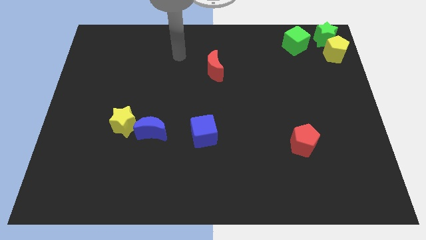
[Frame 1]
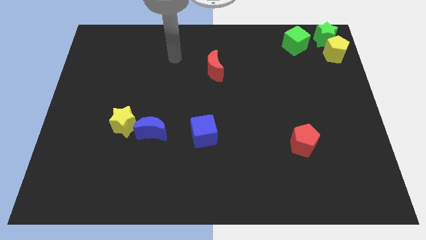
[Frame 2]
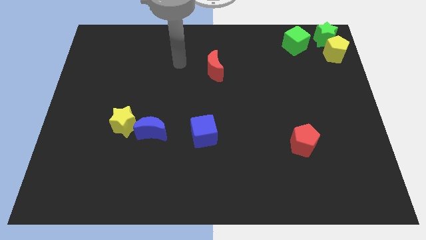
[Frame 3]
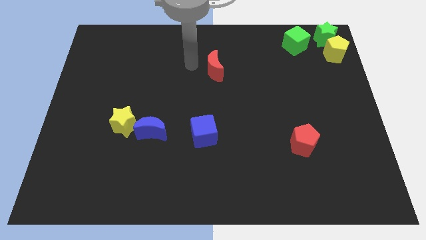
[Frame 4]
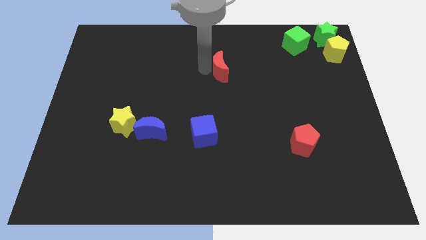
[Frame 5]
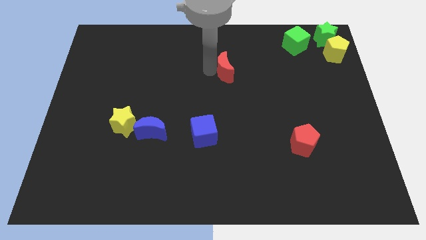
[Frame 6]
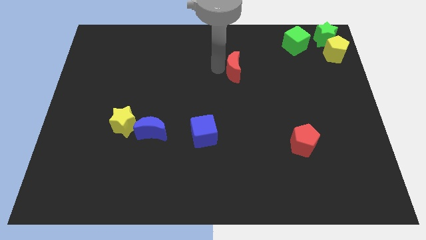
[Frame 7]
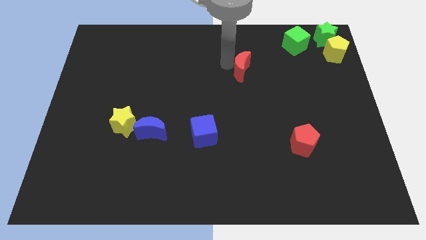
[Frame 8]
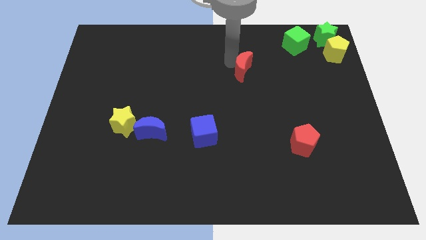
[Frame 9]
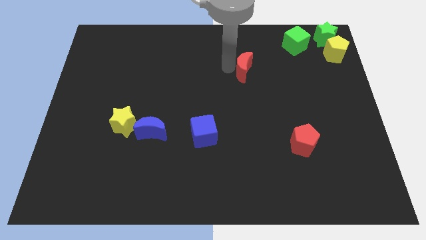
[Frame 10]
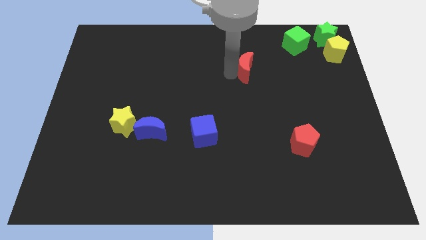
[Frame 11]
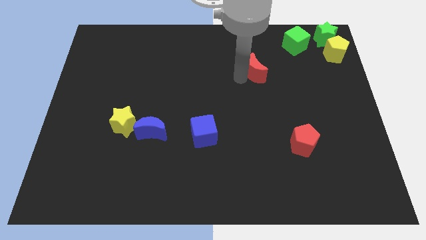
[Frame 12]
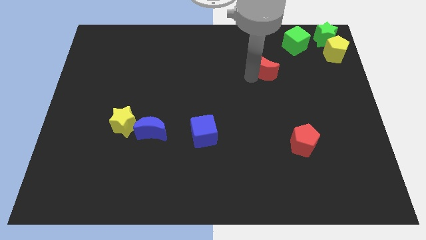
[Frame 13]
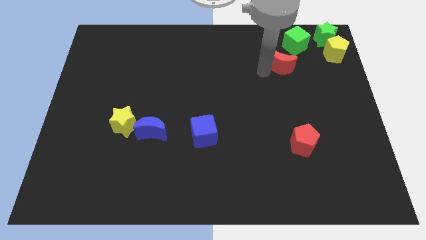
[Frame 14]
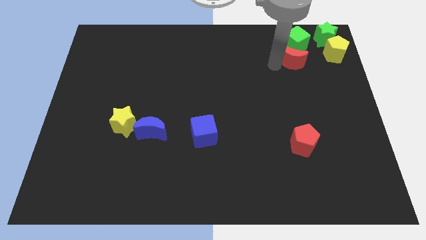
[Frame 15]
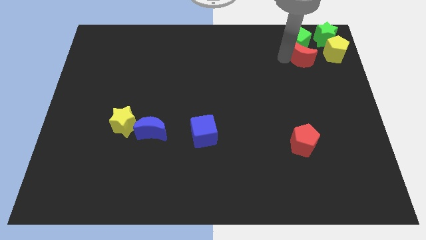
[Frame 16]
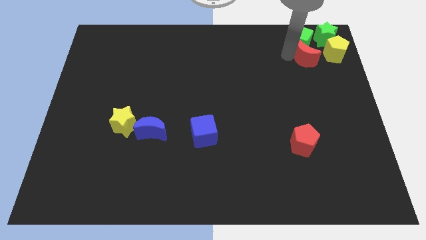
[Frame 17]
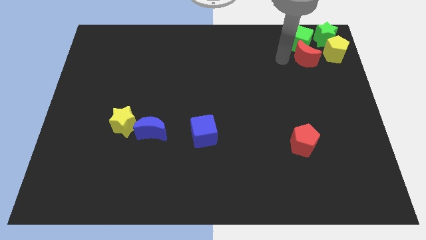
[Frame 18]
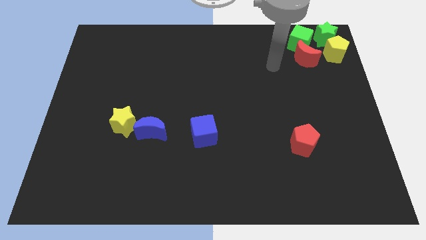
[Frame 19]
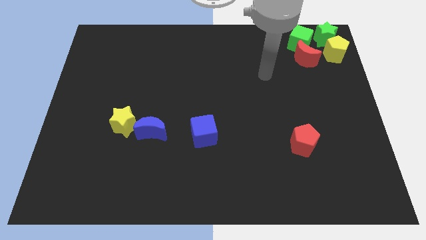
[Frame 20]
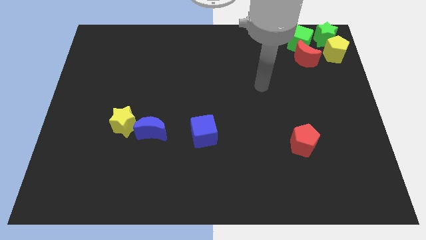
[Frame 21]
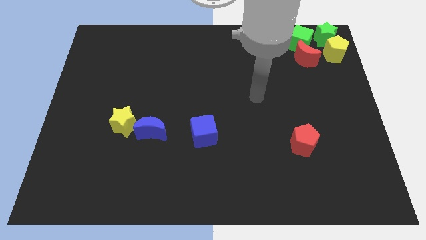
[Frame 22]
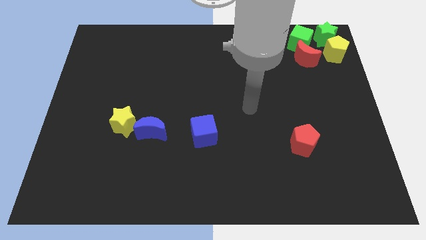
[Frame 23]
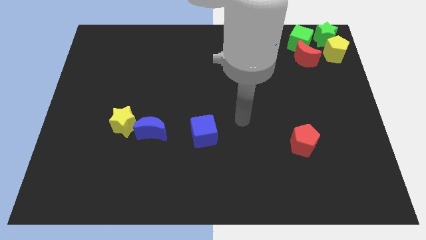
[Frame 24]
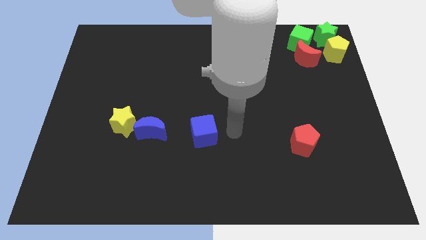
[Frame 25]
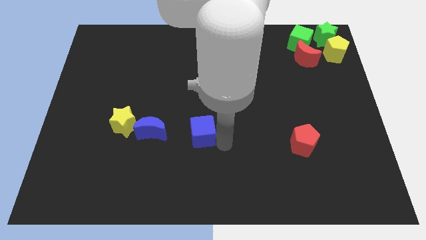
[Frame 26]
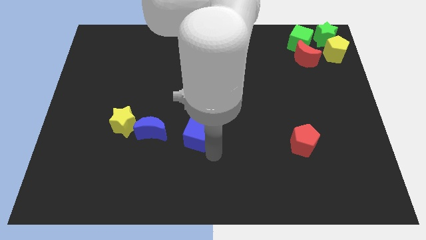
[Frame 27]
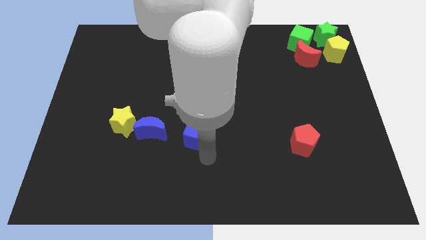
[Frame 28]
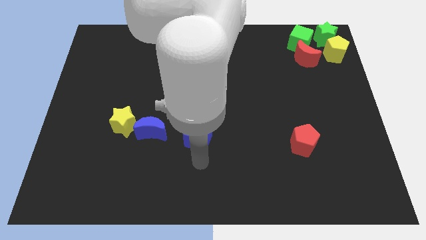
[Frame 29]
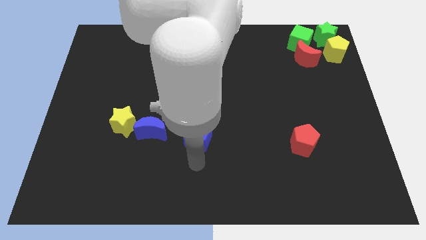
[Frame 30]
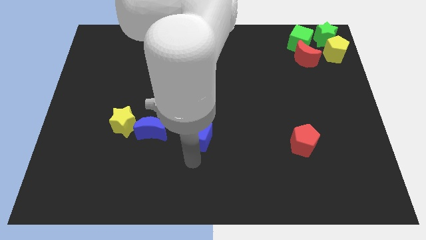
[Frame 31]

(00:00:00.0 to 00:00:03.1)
place the red moon in between the yellow pentagon and green cube

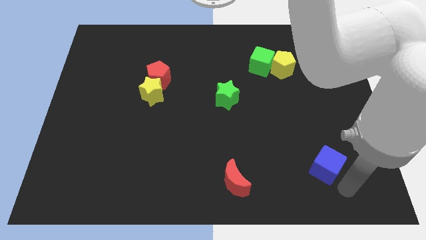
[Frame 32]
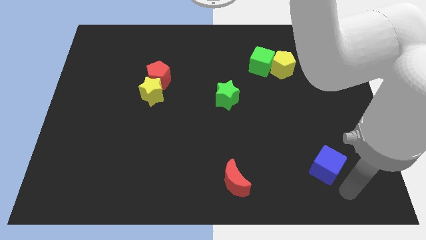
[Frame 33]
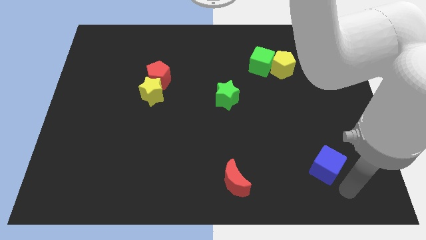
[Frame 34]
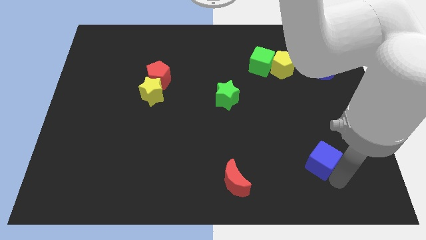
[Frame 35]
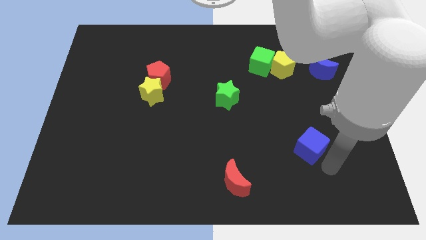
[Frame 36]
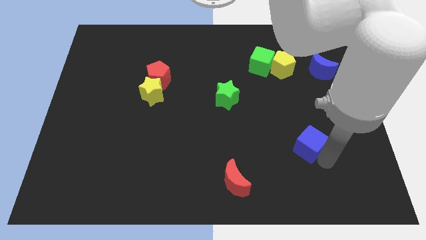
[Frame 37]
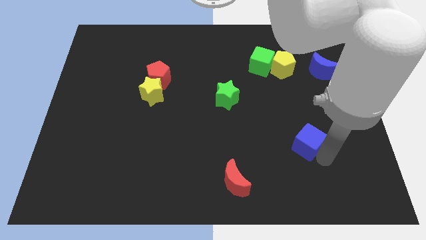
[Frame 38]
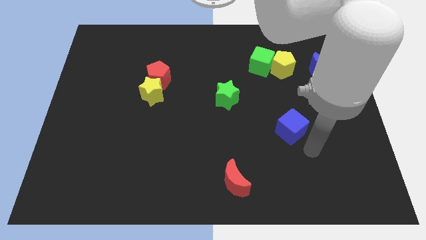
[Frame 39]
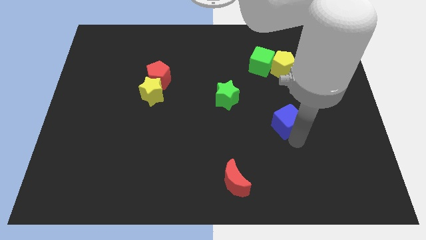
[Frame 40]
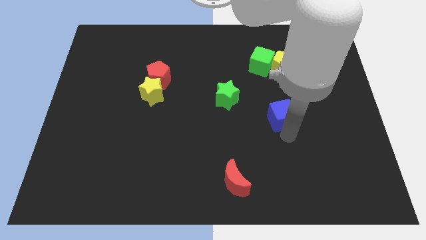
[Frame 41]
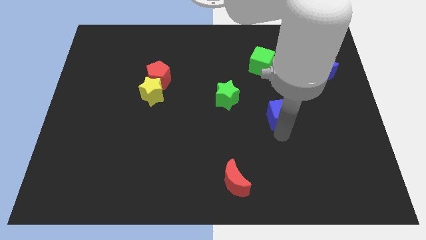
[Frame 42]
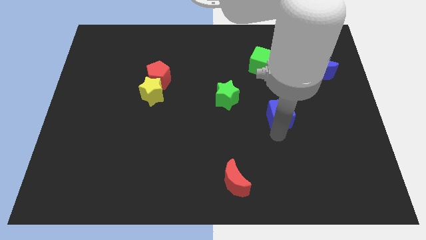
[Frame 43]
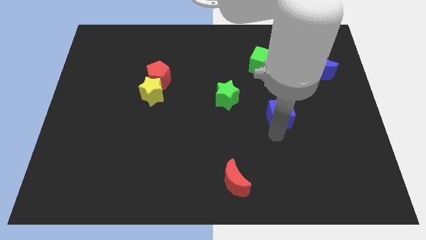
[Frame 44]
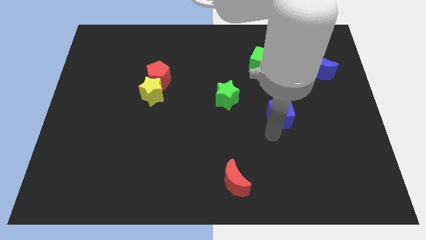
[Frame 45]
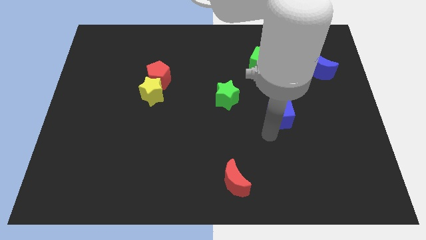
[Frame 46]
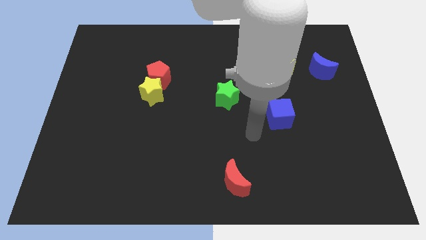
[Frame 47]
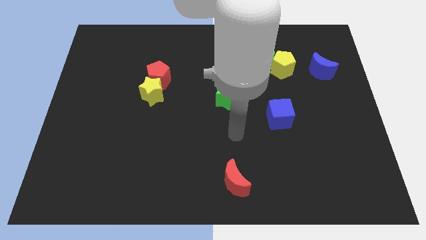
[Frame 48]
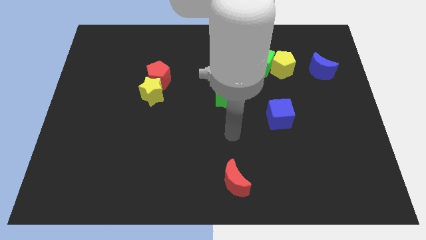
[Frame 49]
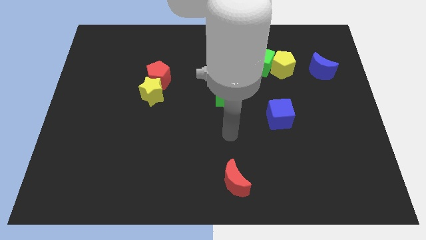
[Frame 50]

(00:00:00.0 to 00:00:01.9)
push the blue cube towards the center of the board

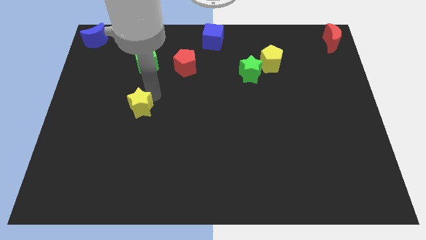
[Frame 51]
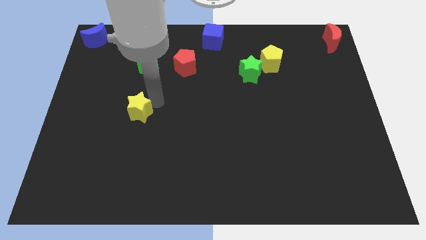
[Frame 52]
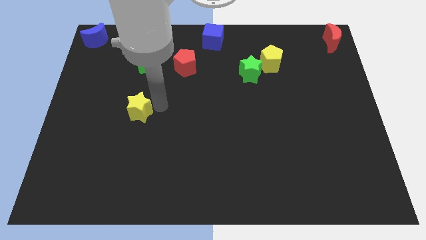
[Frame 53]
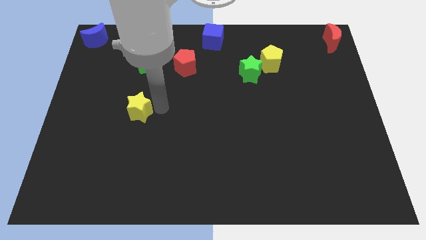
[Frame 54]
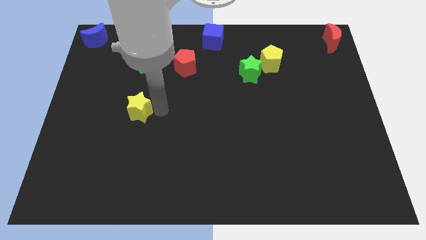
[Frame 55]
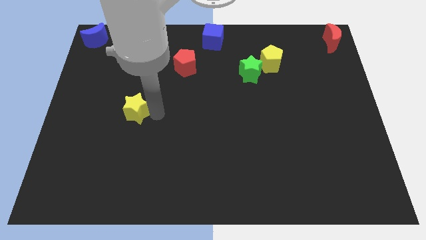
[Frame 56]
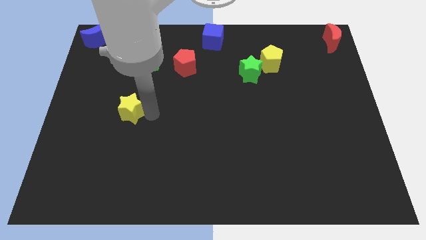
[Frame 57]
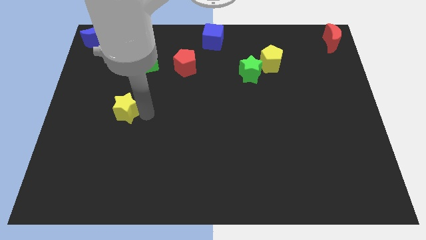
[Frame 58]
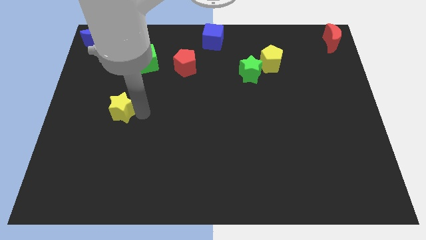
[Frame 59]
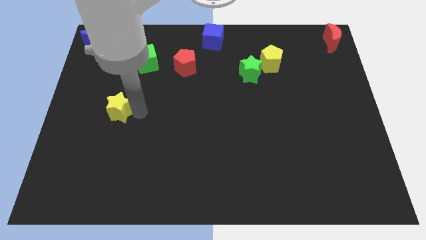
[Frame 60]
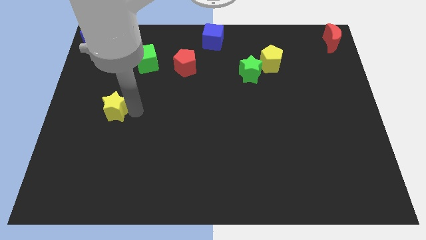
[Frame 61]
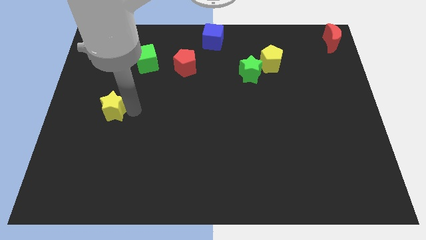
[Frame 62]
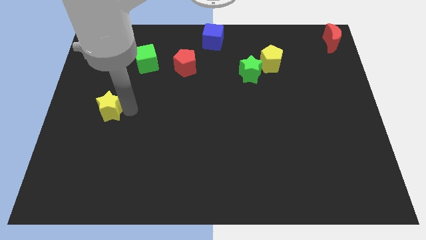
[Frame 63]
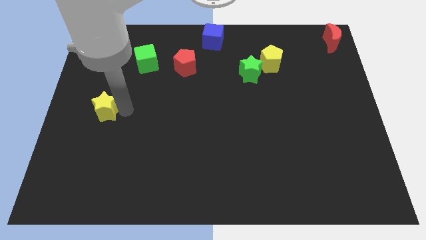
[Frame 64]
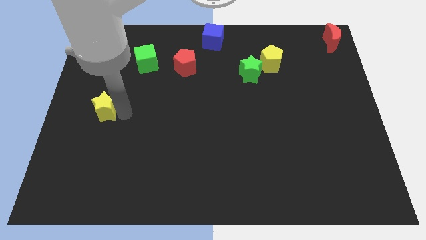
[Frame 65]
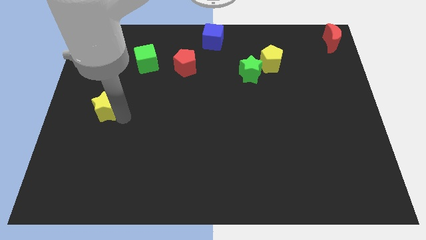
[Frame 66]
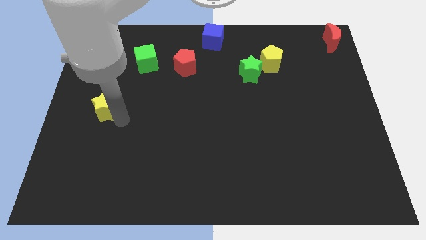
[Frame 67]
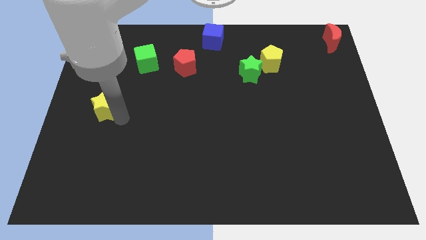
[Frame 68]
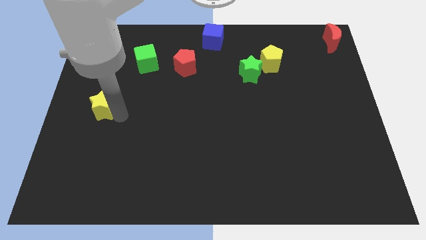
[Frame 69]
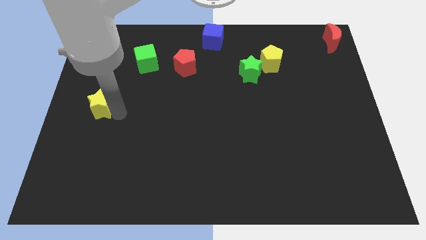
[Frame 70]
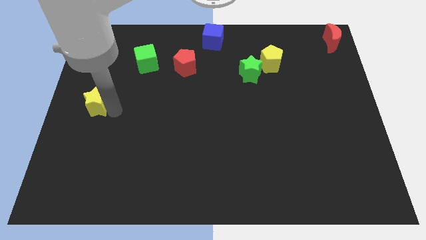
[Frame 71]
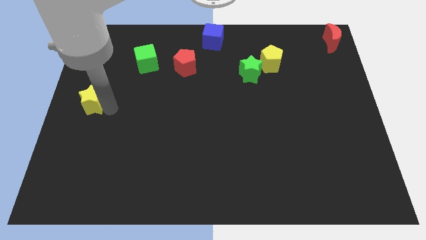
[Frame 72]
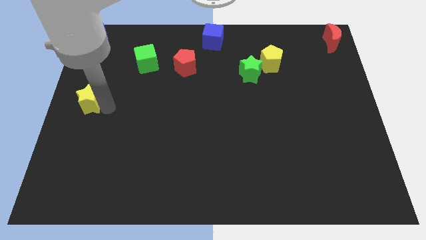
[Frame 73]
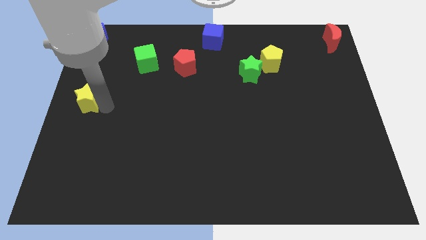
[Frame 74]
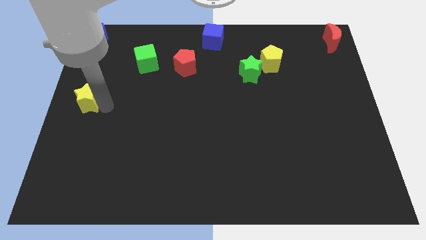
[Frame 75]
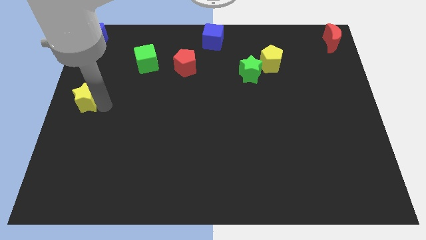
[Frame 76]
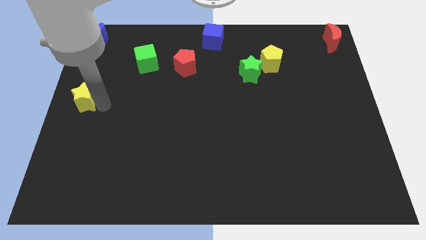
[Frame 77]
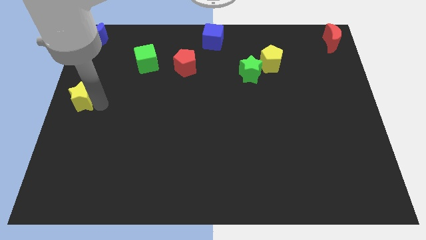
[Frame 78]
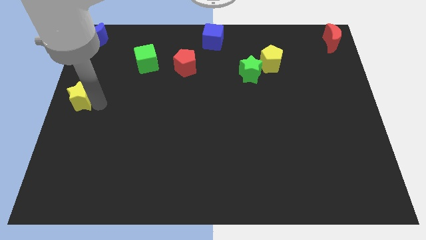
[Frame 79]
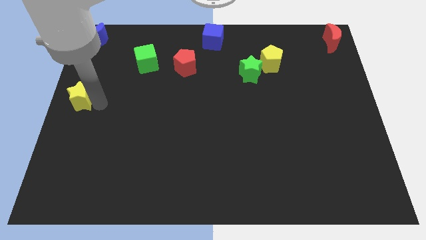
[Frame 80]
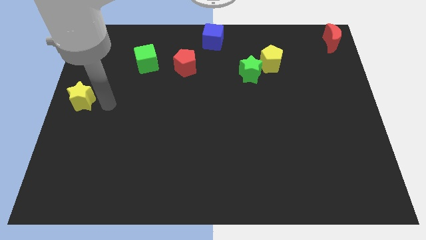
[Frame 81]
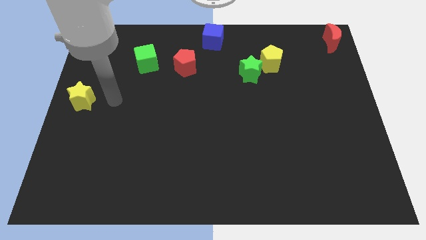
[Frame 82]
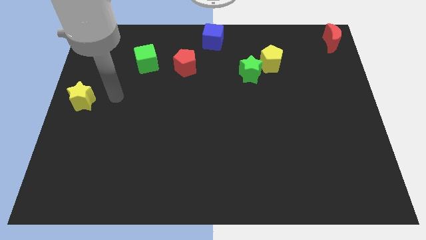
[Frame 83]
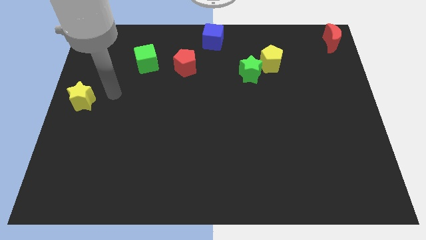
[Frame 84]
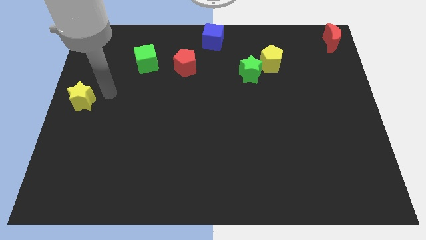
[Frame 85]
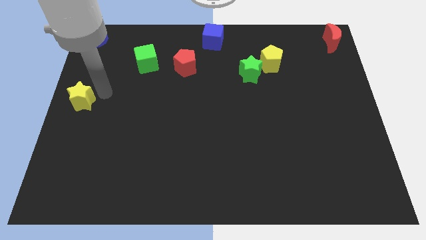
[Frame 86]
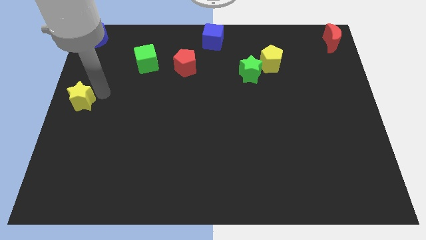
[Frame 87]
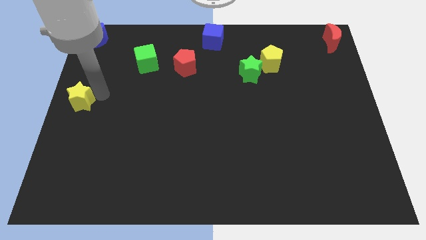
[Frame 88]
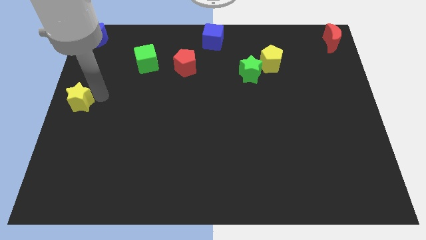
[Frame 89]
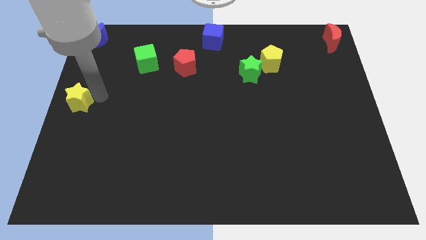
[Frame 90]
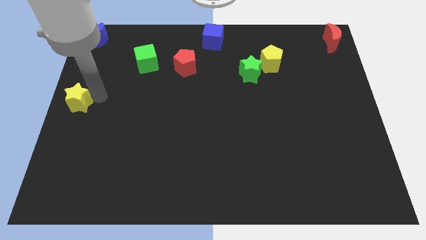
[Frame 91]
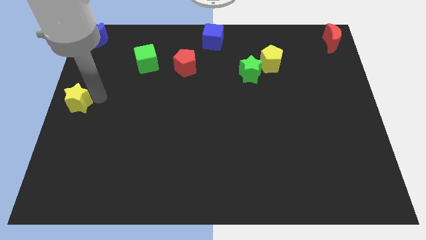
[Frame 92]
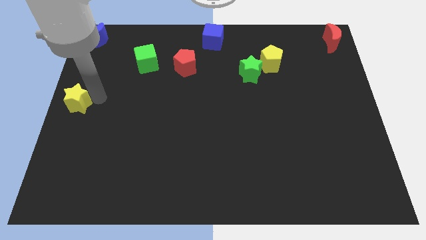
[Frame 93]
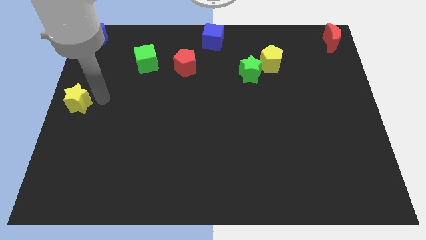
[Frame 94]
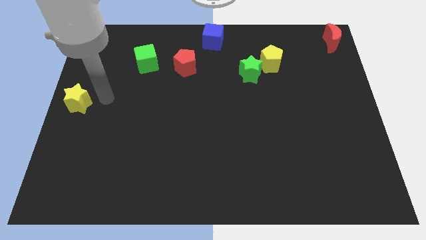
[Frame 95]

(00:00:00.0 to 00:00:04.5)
push the yellow star at the center left of the board
